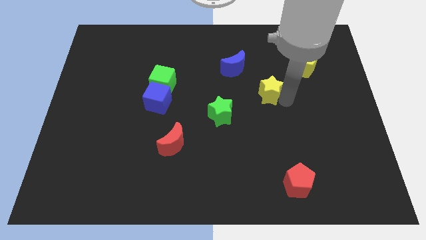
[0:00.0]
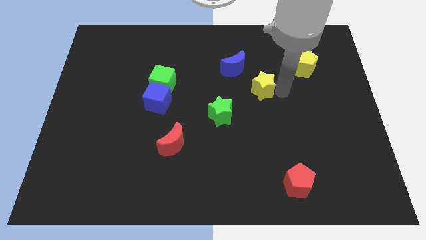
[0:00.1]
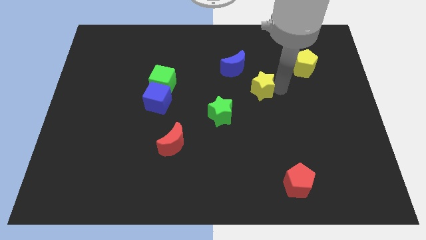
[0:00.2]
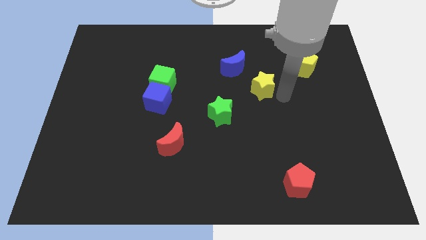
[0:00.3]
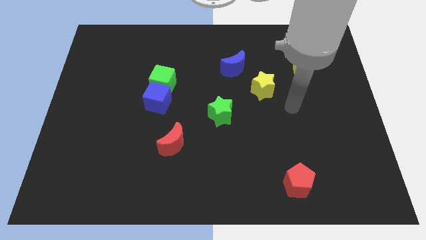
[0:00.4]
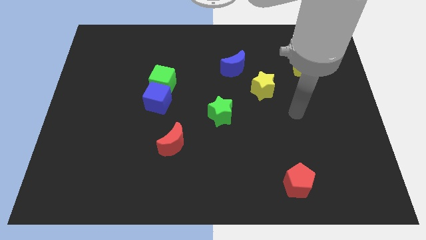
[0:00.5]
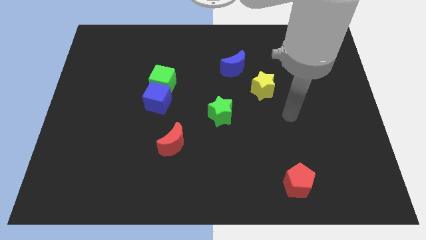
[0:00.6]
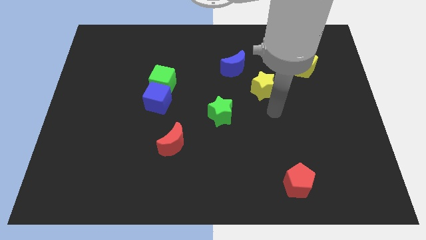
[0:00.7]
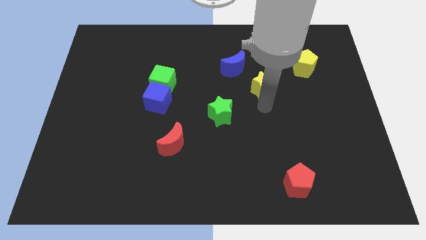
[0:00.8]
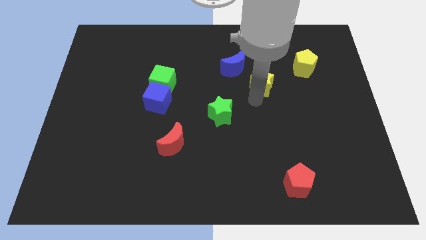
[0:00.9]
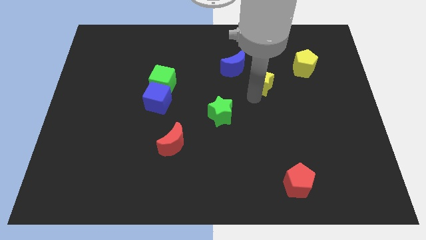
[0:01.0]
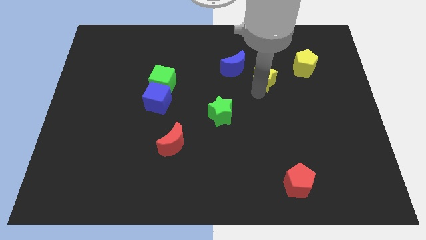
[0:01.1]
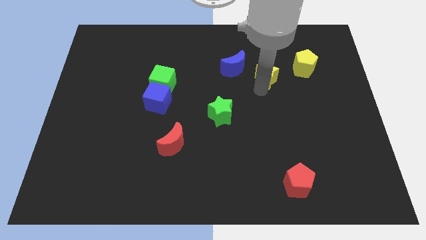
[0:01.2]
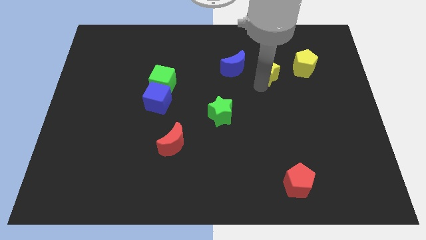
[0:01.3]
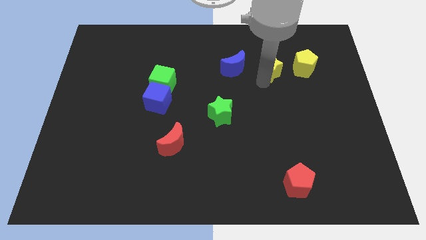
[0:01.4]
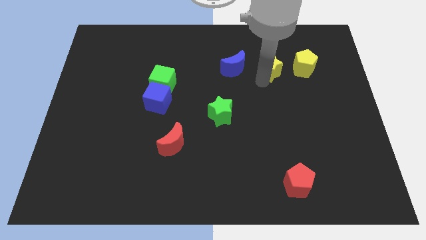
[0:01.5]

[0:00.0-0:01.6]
place the yellow star between the yellow pentagon and blue moon

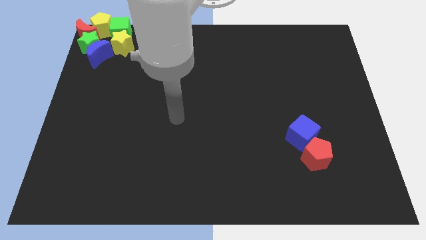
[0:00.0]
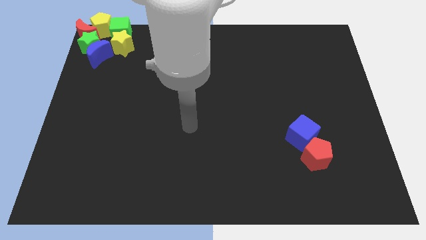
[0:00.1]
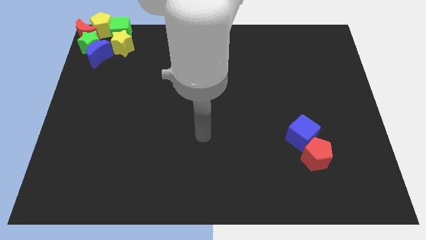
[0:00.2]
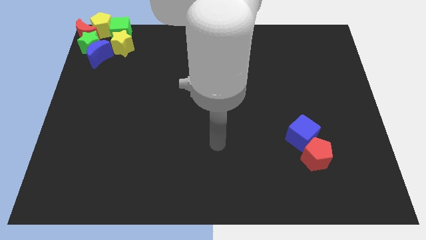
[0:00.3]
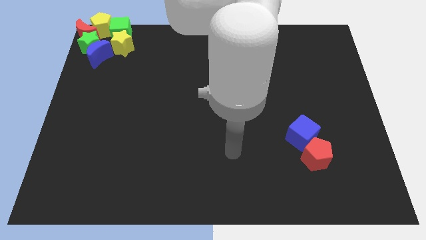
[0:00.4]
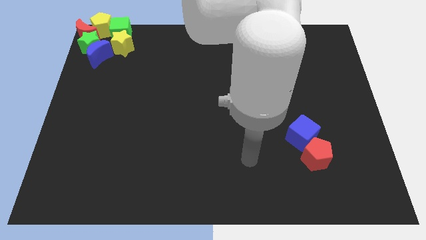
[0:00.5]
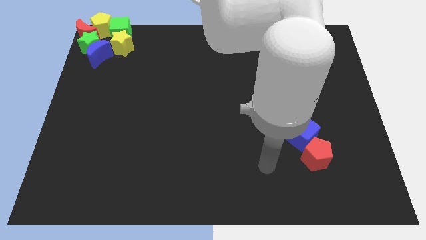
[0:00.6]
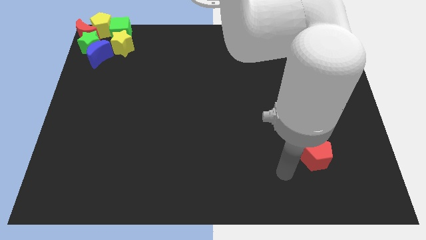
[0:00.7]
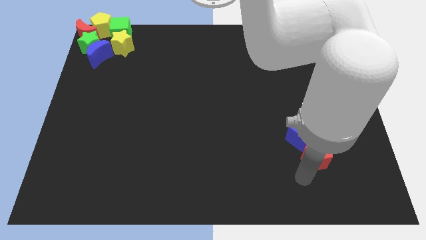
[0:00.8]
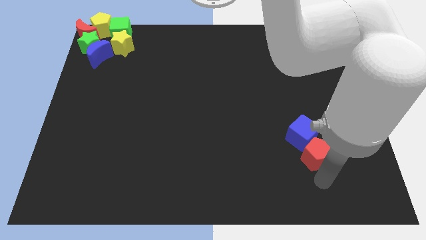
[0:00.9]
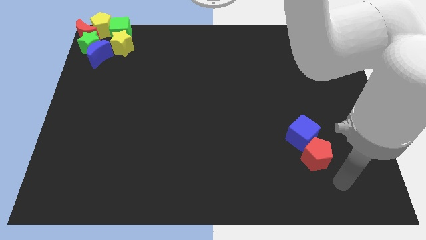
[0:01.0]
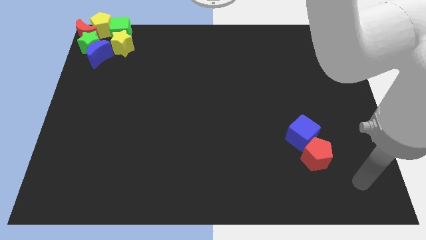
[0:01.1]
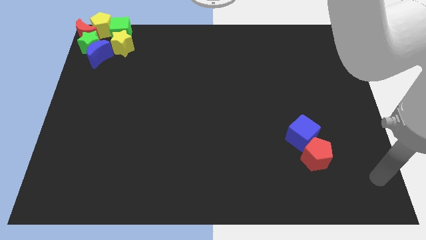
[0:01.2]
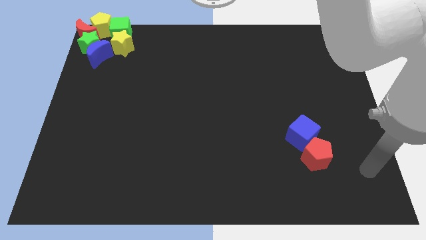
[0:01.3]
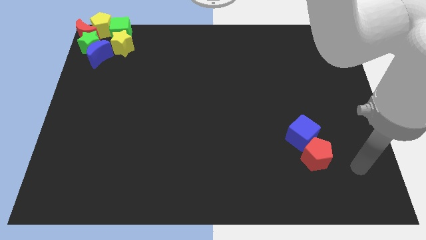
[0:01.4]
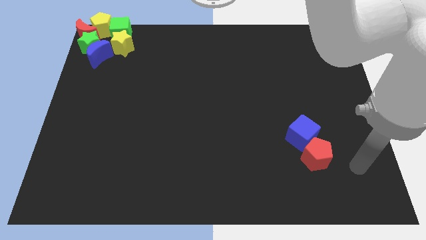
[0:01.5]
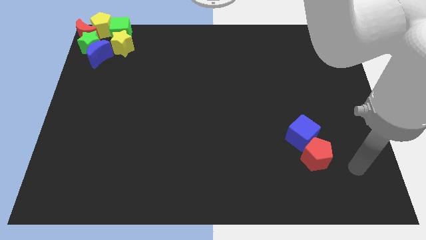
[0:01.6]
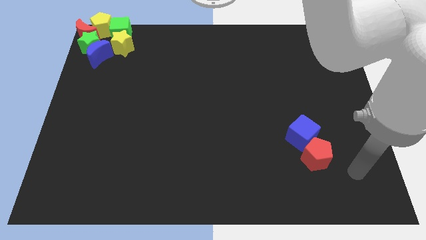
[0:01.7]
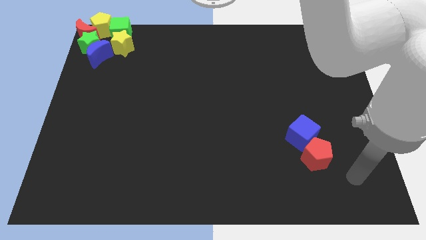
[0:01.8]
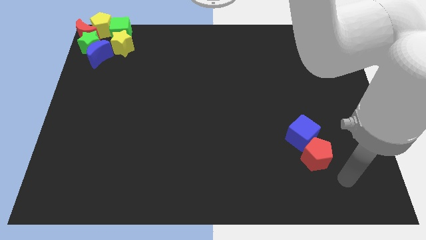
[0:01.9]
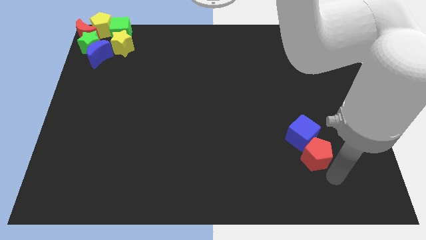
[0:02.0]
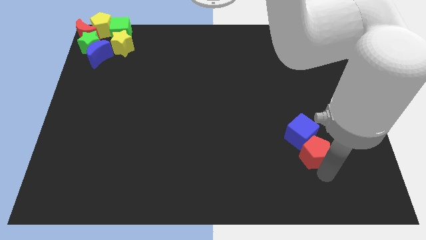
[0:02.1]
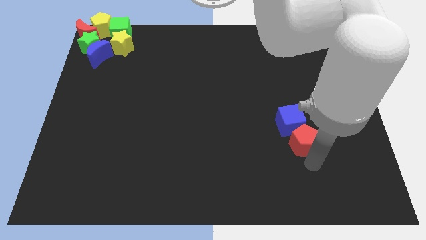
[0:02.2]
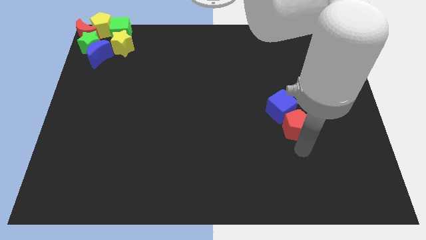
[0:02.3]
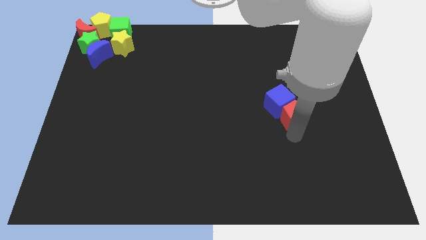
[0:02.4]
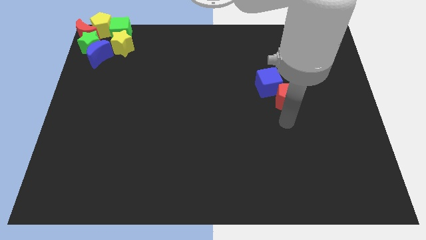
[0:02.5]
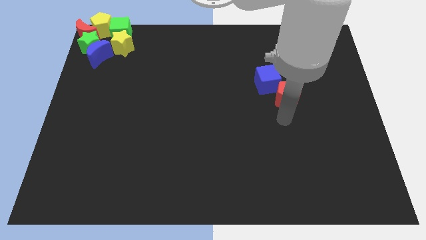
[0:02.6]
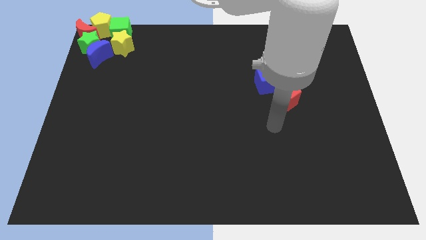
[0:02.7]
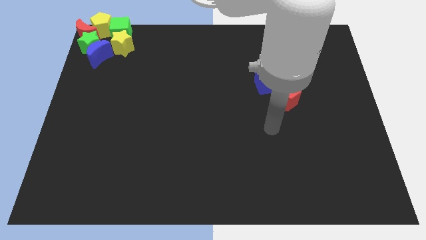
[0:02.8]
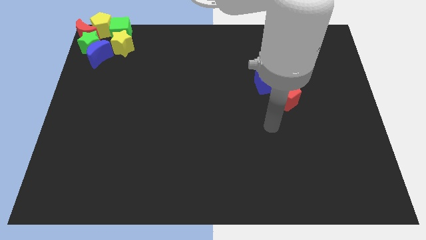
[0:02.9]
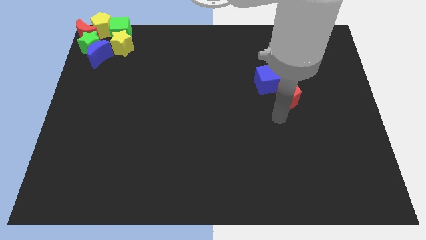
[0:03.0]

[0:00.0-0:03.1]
push the red pentagon along with the blue cube towards the top

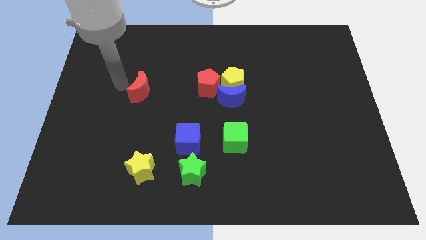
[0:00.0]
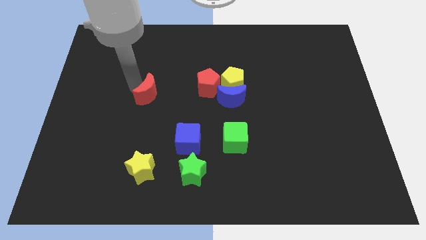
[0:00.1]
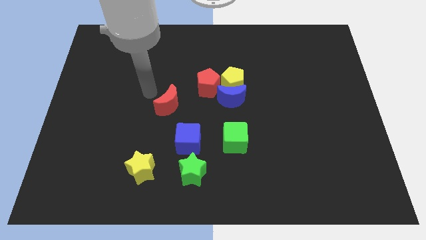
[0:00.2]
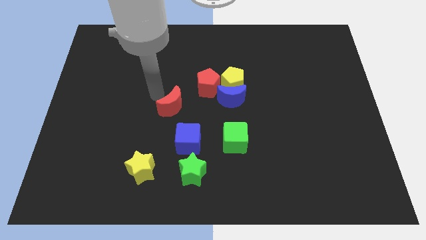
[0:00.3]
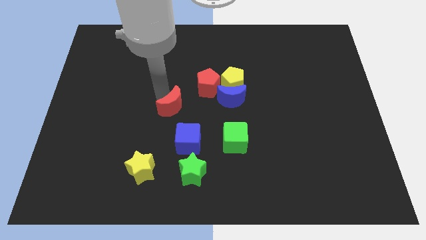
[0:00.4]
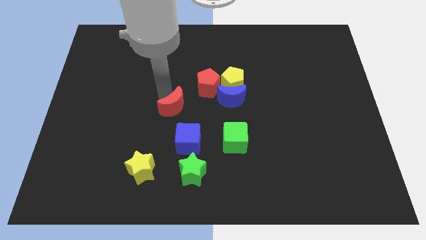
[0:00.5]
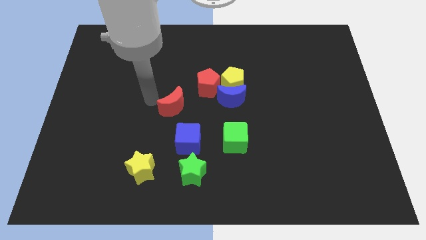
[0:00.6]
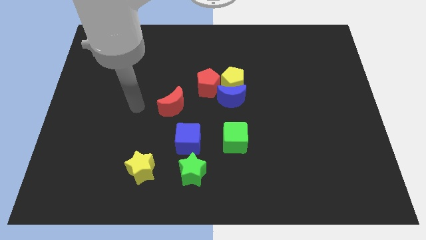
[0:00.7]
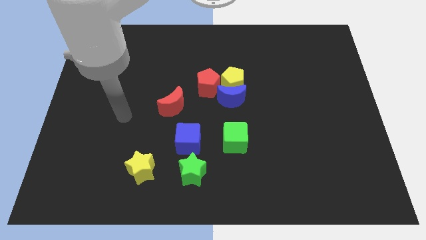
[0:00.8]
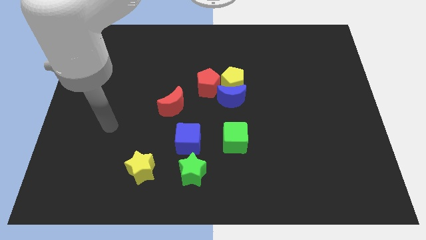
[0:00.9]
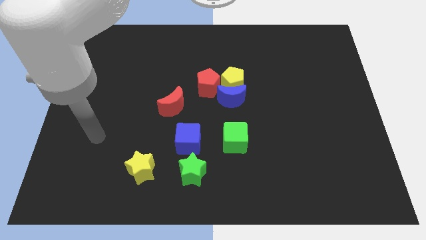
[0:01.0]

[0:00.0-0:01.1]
push red moon towards center

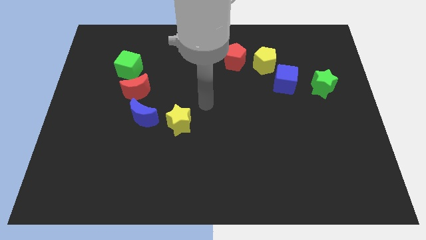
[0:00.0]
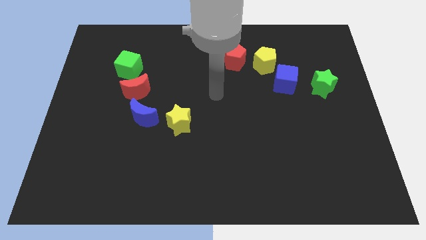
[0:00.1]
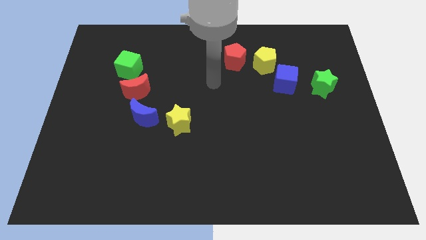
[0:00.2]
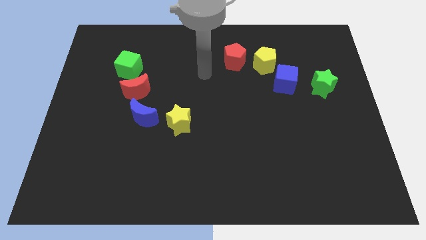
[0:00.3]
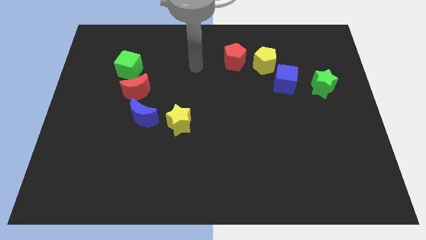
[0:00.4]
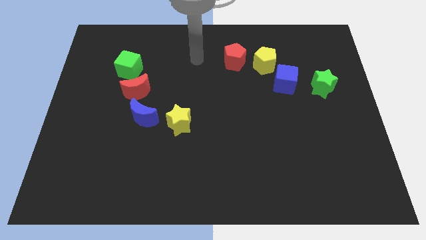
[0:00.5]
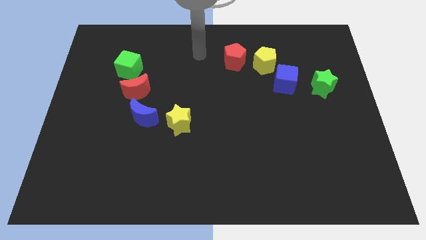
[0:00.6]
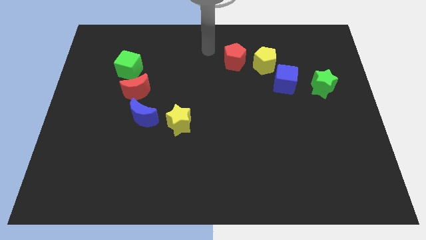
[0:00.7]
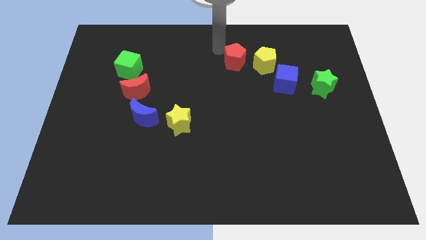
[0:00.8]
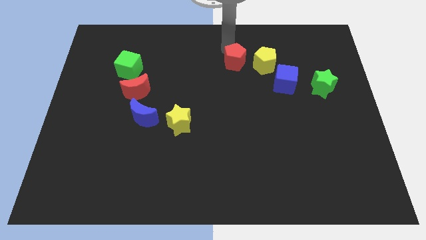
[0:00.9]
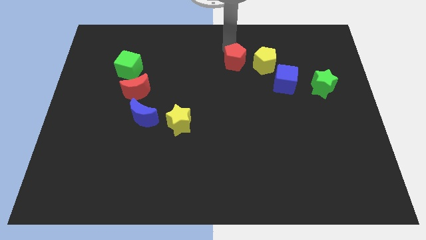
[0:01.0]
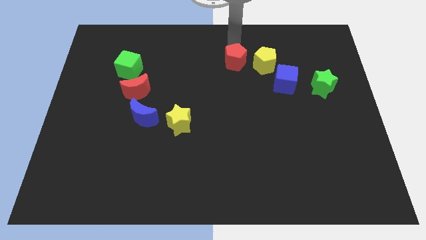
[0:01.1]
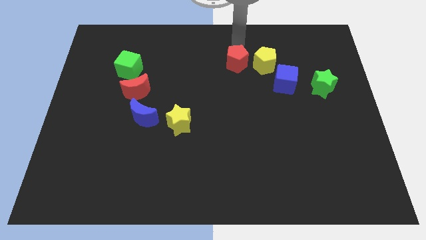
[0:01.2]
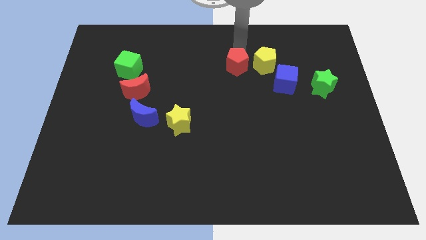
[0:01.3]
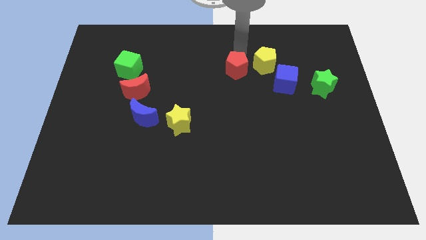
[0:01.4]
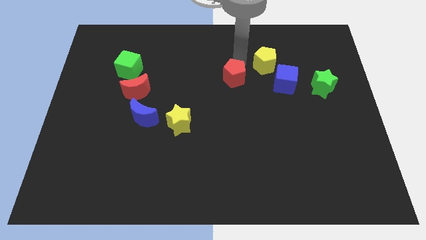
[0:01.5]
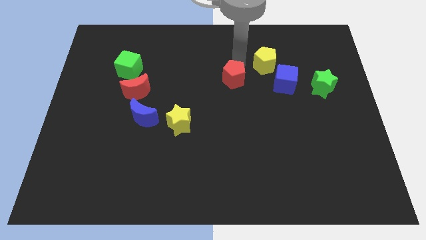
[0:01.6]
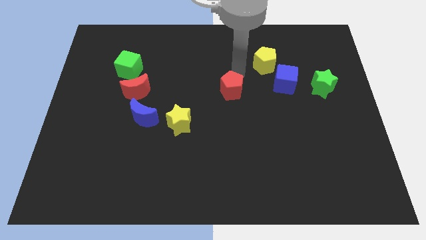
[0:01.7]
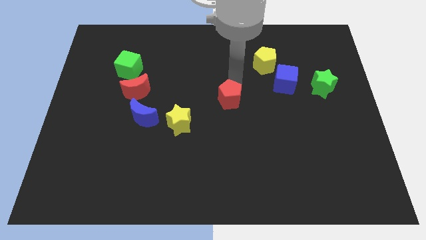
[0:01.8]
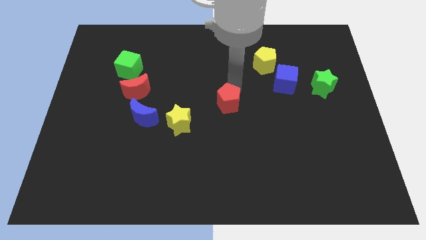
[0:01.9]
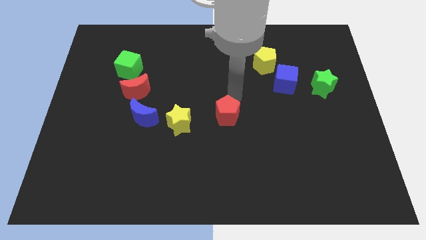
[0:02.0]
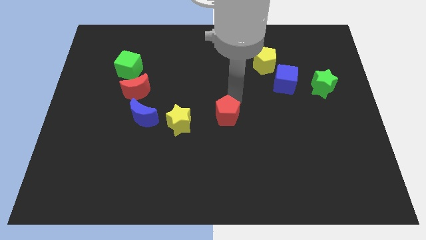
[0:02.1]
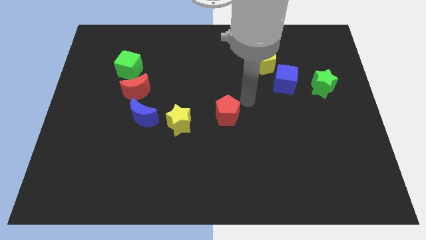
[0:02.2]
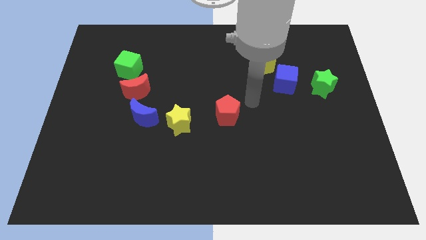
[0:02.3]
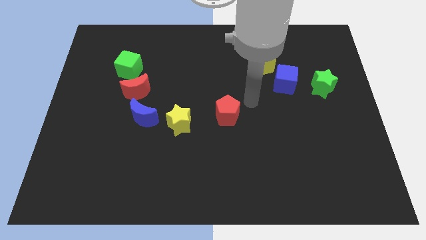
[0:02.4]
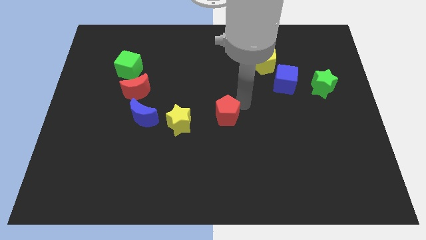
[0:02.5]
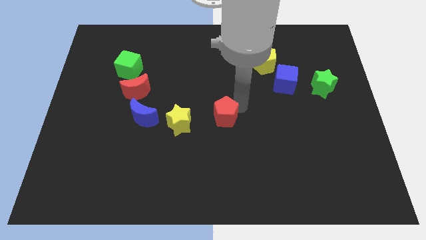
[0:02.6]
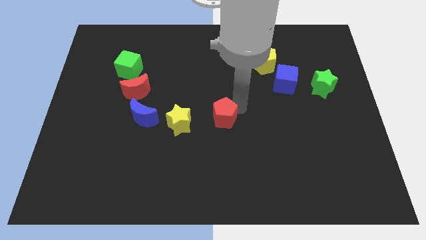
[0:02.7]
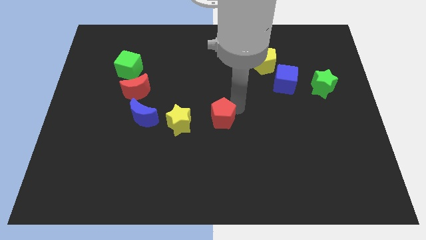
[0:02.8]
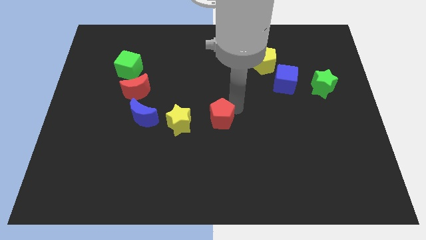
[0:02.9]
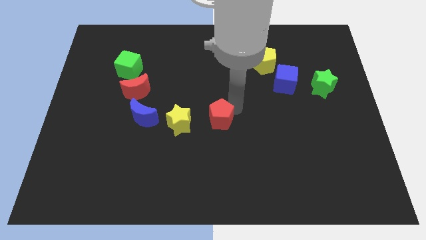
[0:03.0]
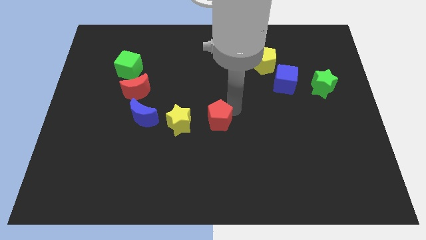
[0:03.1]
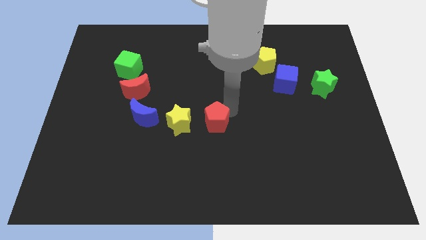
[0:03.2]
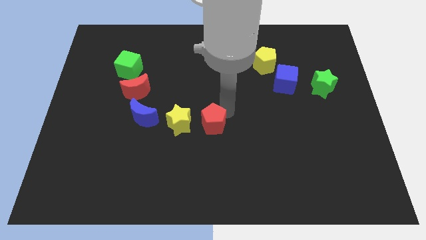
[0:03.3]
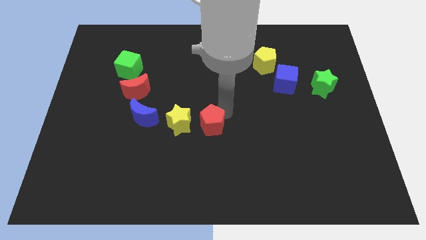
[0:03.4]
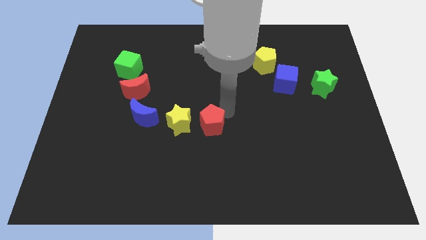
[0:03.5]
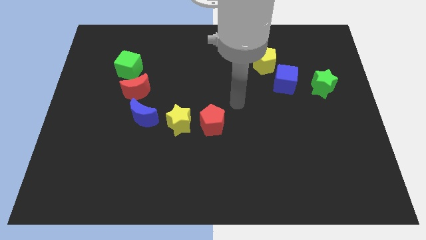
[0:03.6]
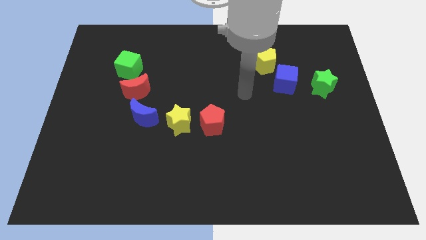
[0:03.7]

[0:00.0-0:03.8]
place the red pentagon to the right of the yellow star
